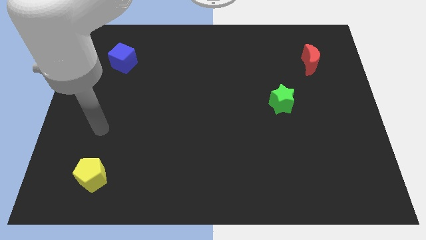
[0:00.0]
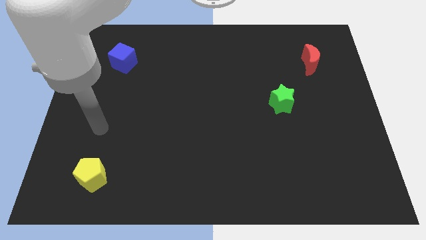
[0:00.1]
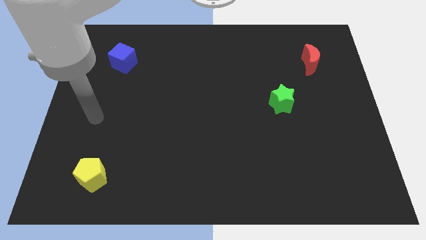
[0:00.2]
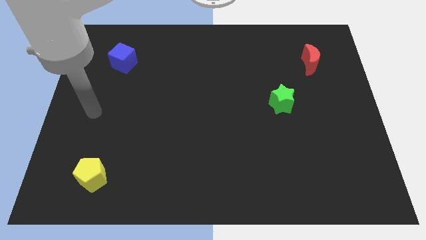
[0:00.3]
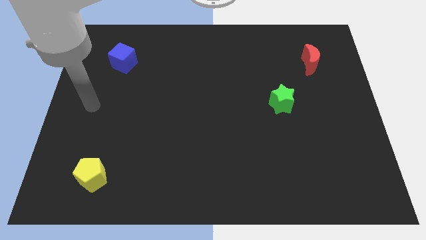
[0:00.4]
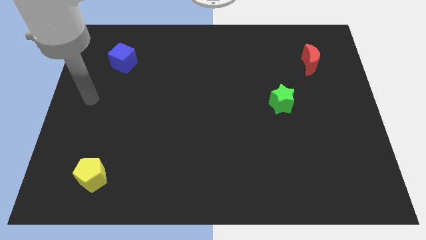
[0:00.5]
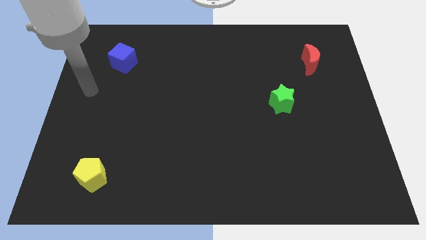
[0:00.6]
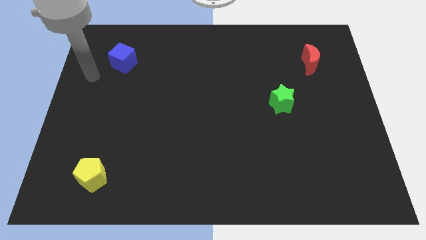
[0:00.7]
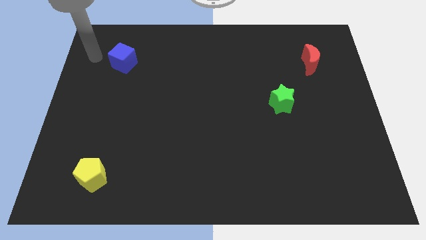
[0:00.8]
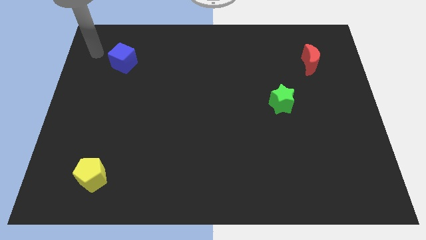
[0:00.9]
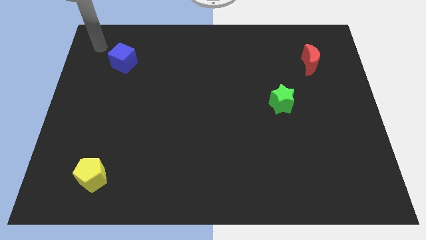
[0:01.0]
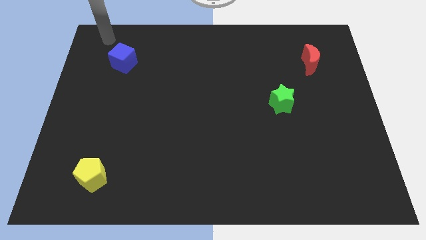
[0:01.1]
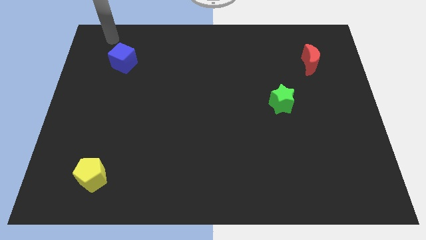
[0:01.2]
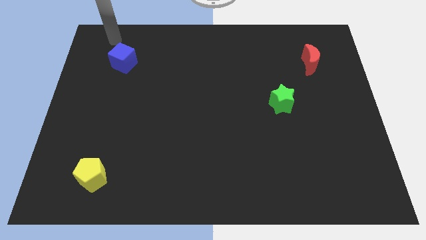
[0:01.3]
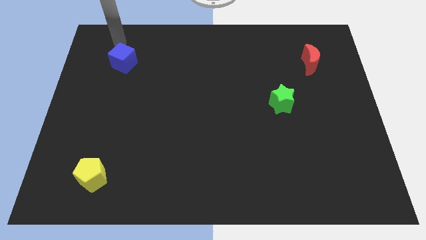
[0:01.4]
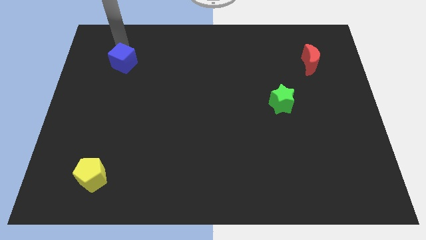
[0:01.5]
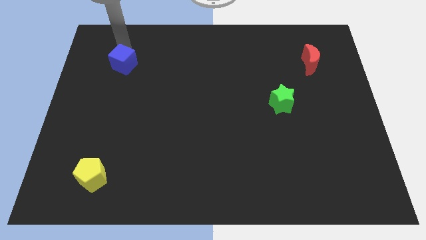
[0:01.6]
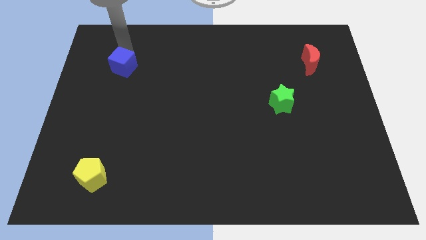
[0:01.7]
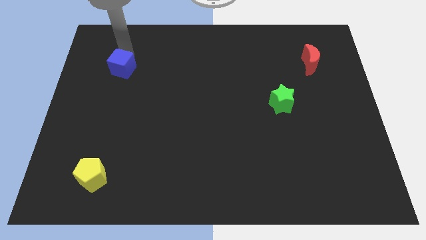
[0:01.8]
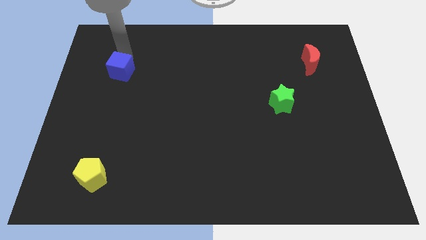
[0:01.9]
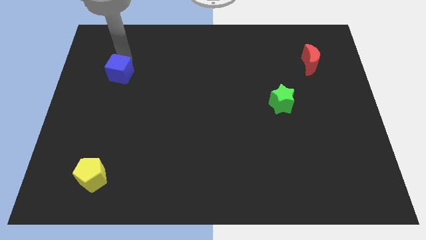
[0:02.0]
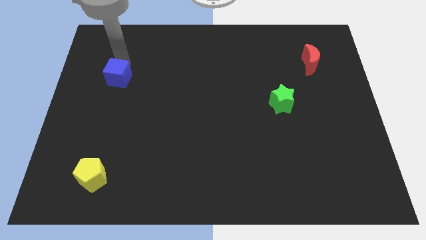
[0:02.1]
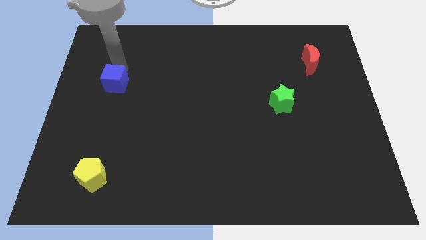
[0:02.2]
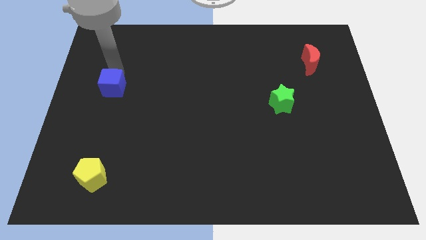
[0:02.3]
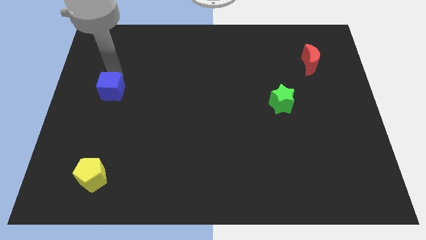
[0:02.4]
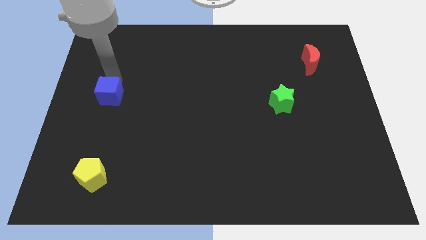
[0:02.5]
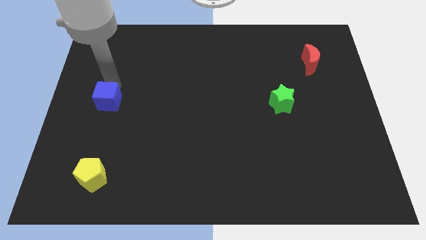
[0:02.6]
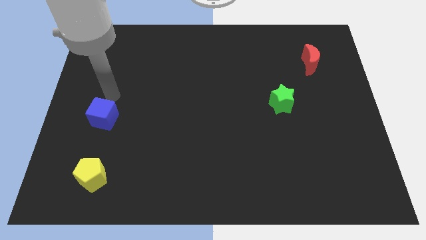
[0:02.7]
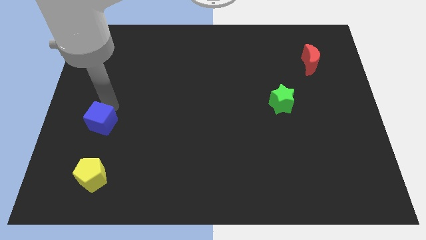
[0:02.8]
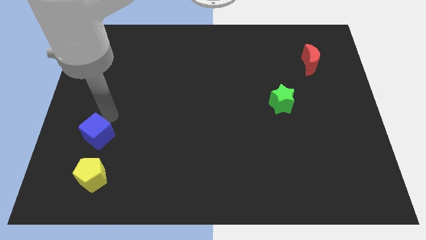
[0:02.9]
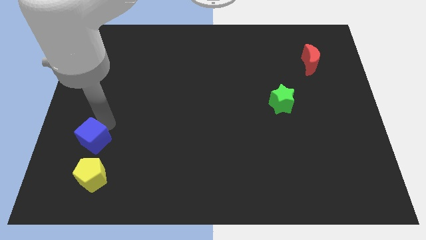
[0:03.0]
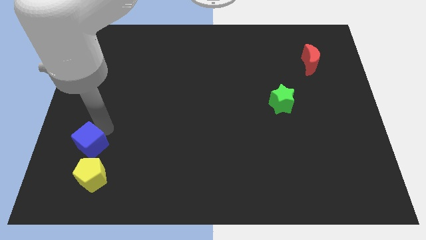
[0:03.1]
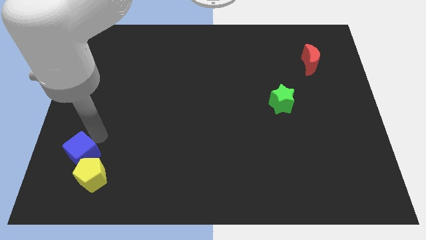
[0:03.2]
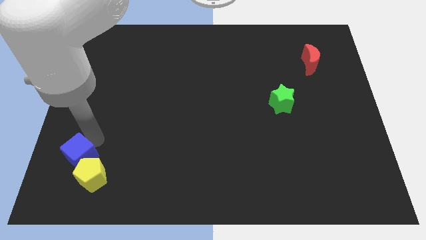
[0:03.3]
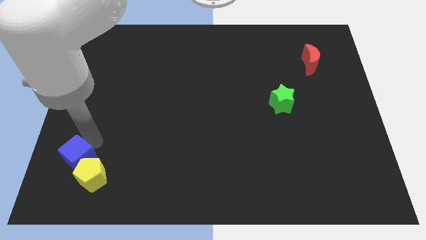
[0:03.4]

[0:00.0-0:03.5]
slide the blue cube to the yellow block

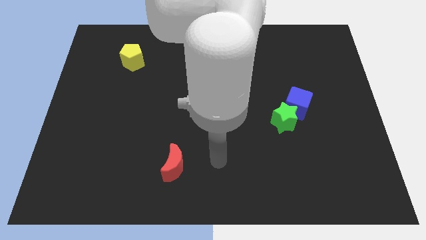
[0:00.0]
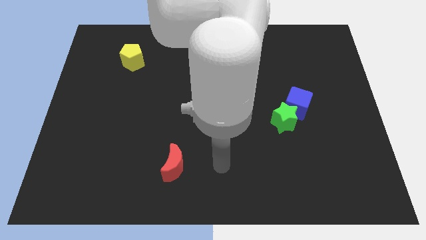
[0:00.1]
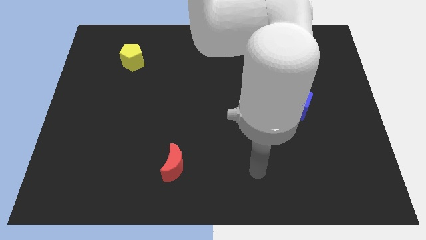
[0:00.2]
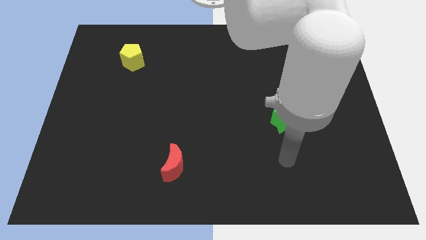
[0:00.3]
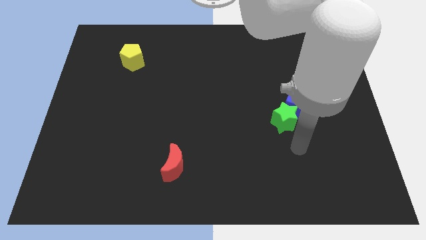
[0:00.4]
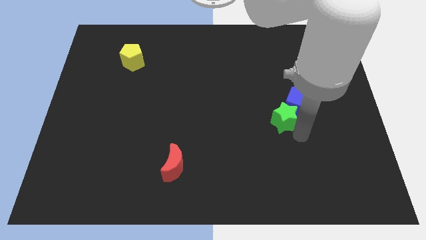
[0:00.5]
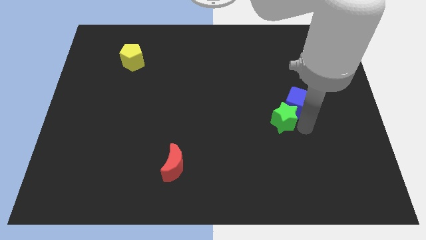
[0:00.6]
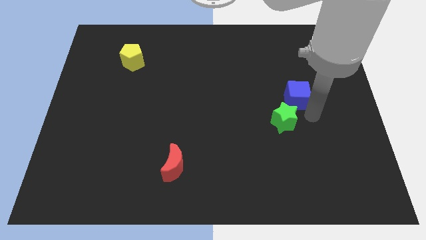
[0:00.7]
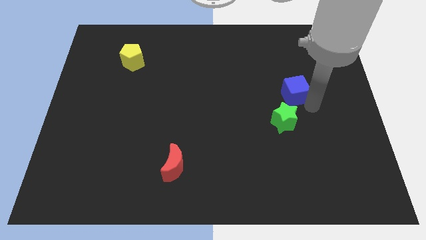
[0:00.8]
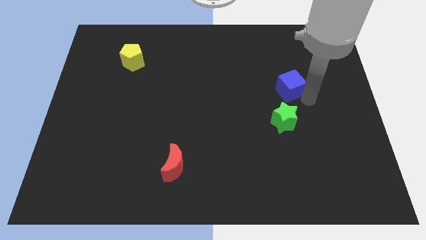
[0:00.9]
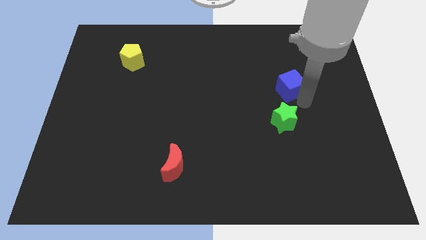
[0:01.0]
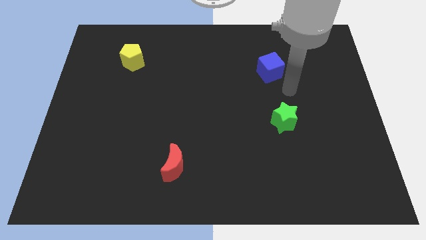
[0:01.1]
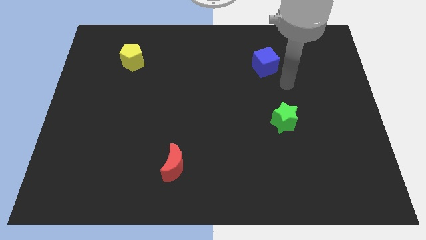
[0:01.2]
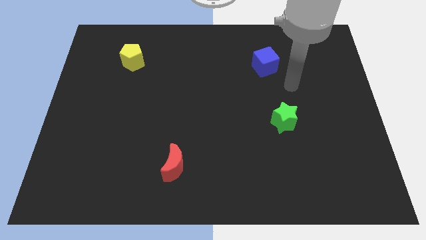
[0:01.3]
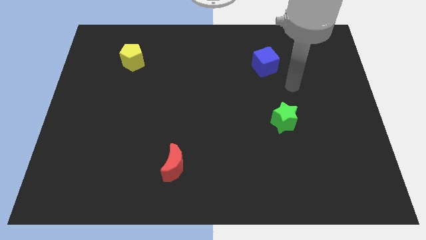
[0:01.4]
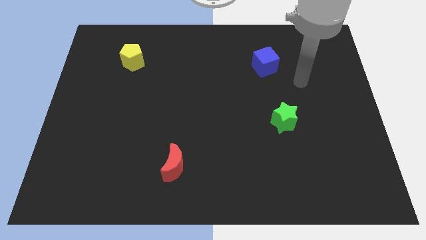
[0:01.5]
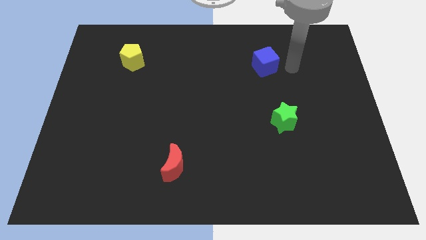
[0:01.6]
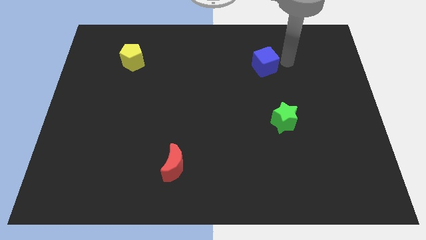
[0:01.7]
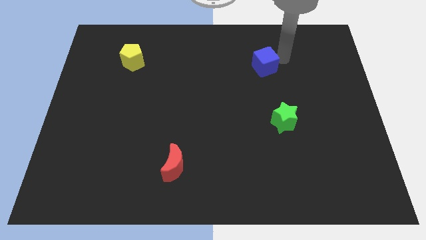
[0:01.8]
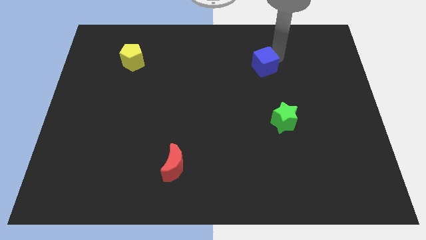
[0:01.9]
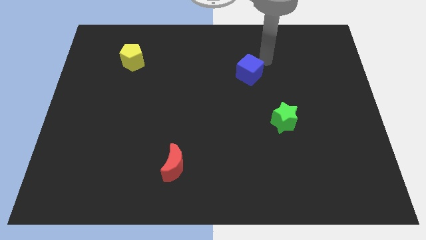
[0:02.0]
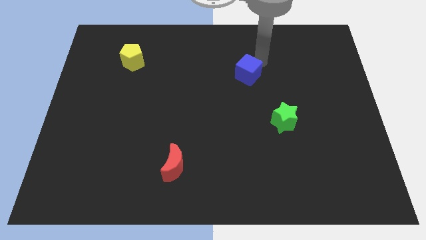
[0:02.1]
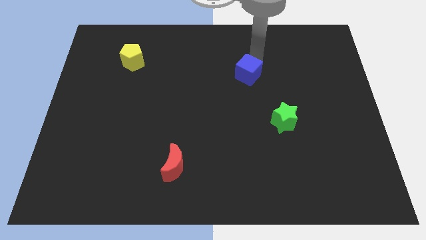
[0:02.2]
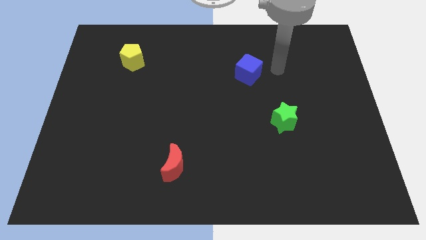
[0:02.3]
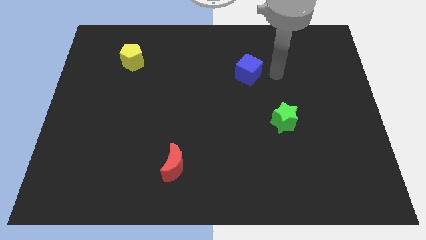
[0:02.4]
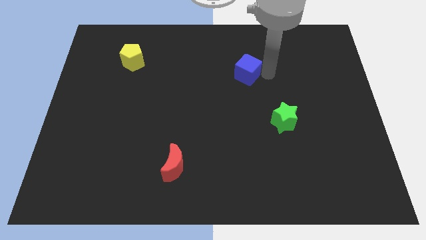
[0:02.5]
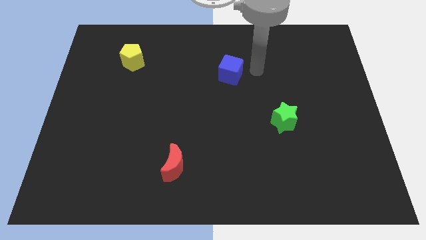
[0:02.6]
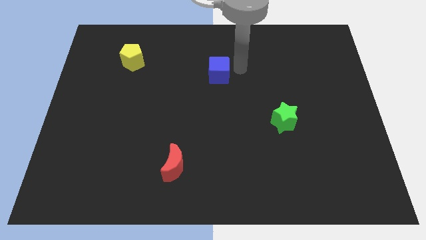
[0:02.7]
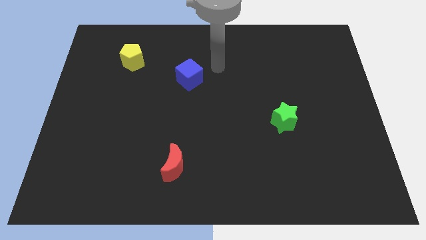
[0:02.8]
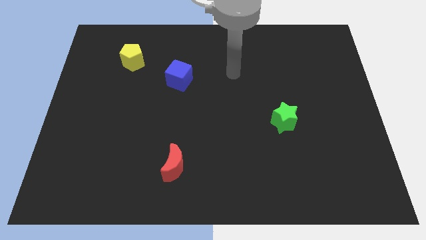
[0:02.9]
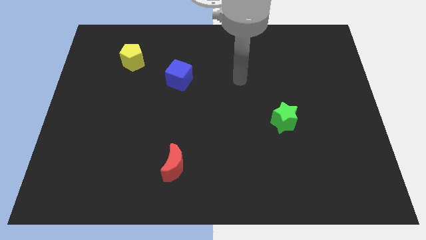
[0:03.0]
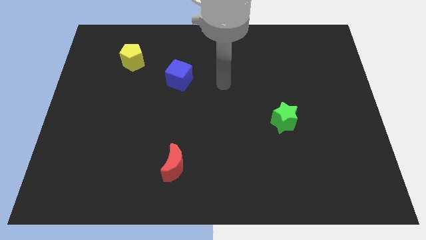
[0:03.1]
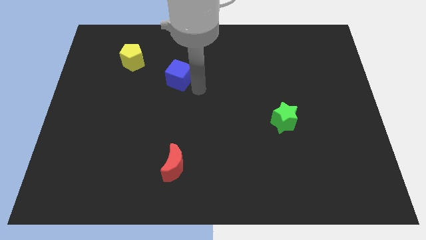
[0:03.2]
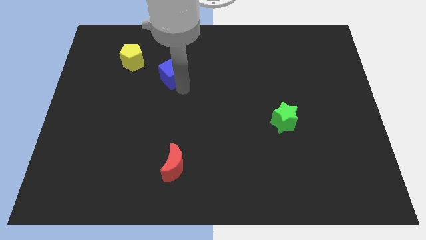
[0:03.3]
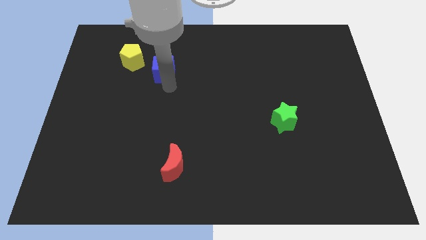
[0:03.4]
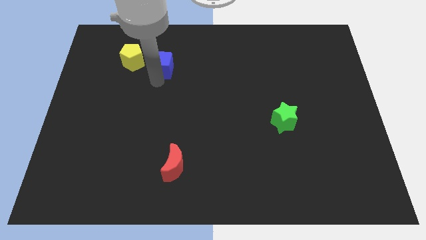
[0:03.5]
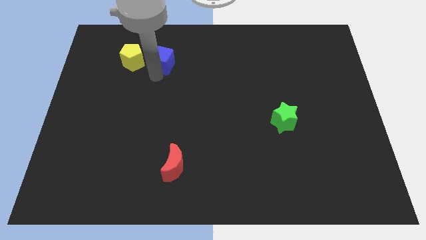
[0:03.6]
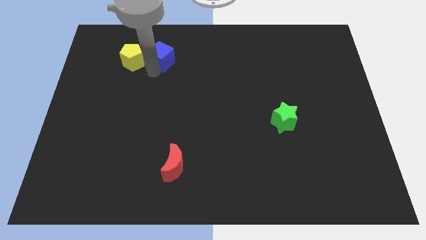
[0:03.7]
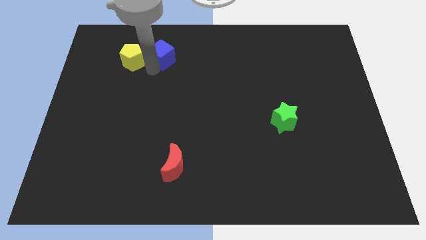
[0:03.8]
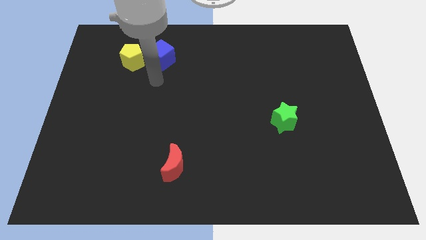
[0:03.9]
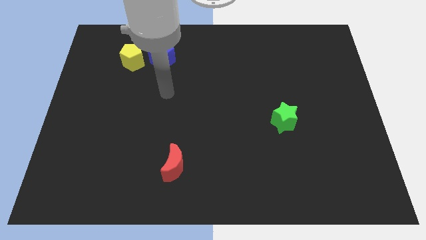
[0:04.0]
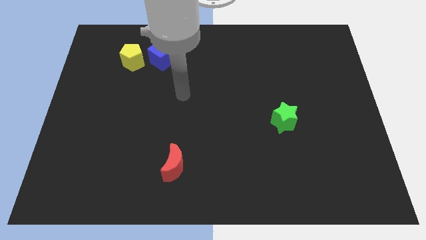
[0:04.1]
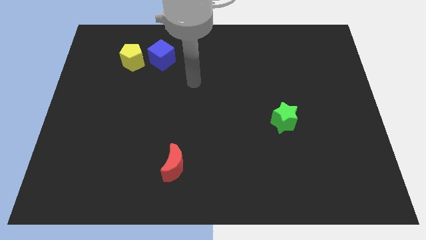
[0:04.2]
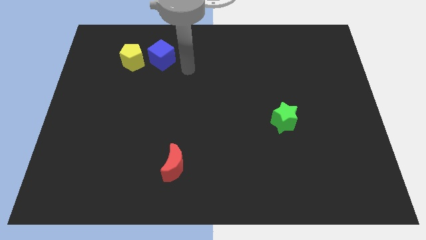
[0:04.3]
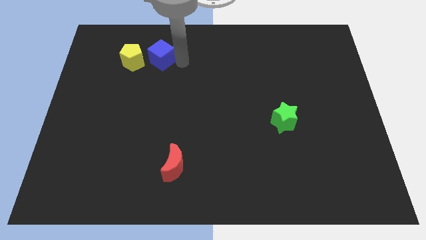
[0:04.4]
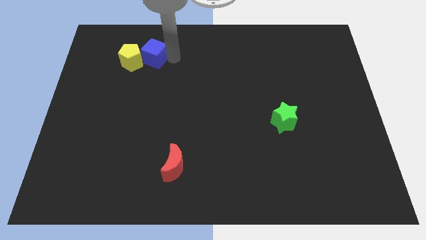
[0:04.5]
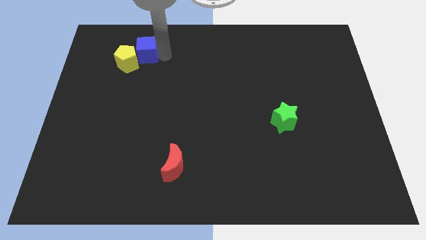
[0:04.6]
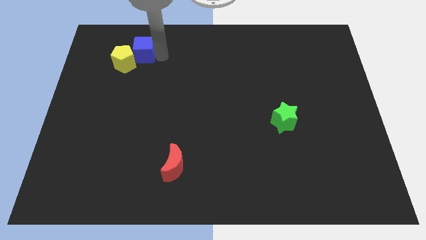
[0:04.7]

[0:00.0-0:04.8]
push the cube towards the pentagon
